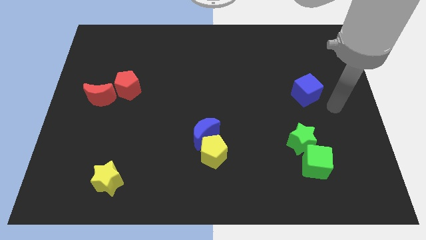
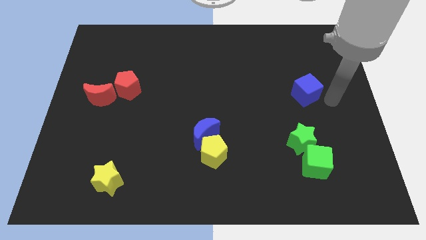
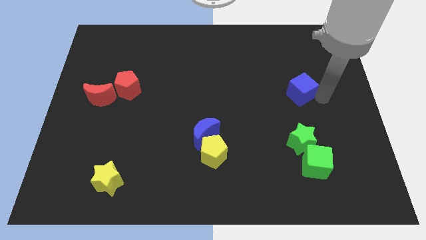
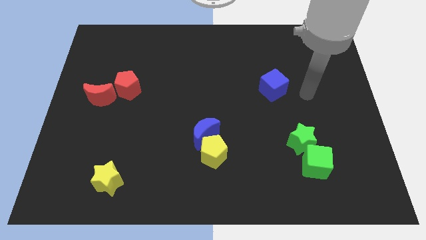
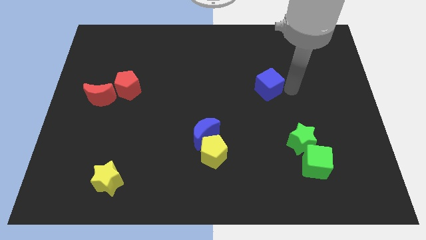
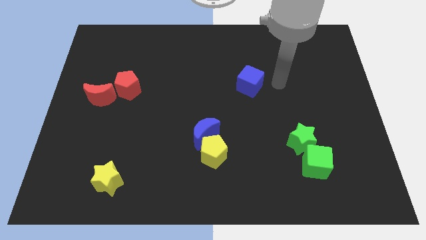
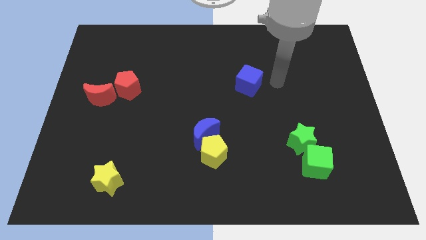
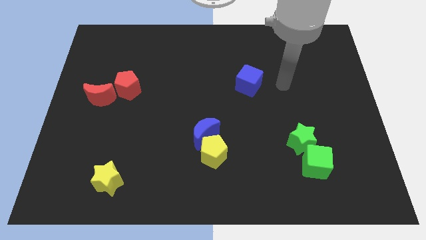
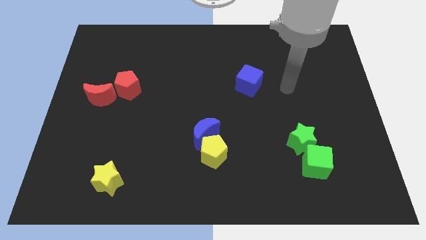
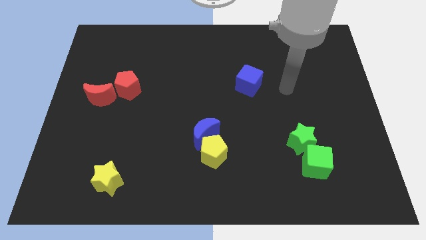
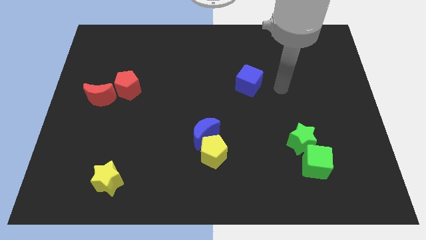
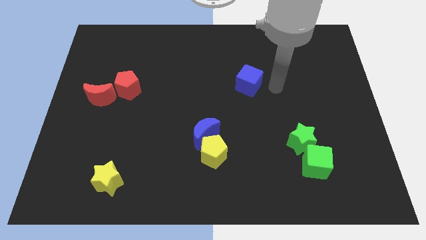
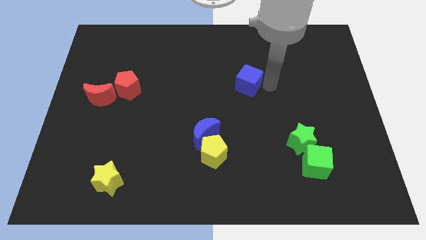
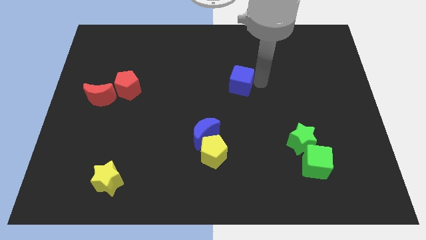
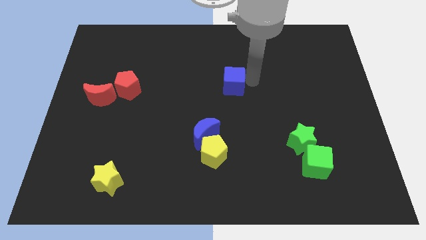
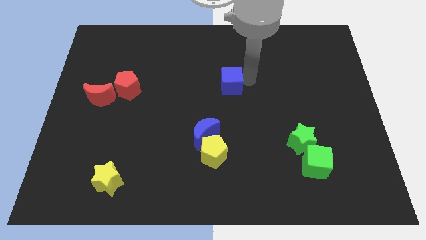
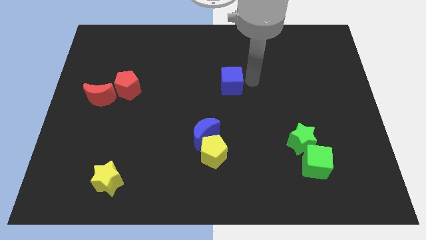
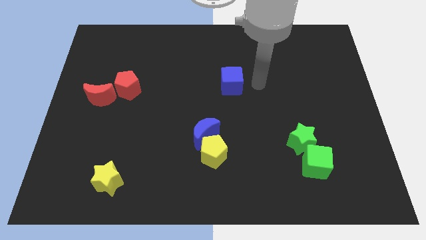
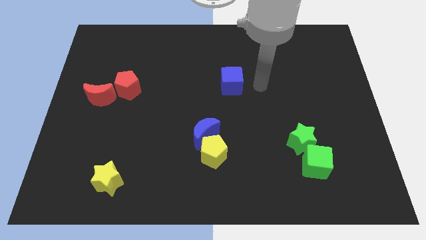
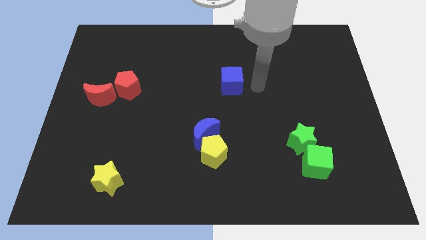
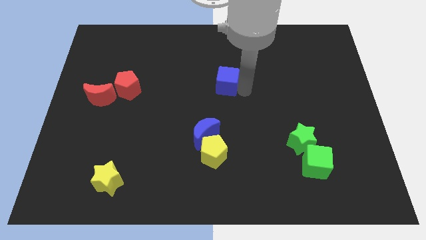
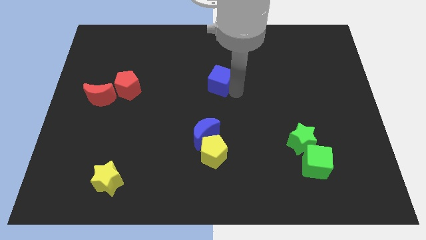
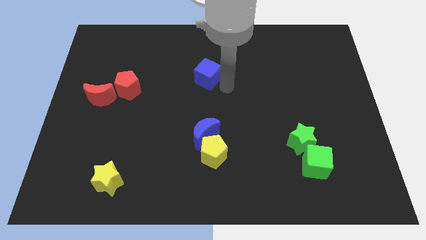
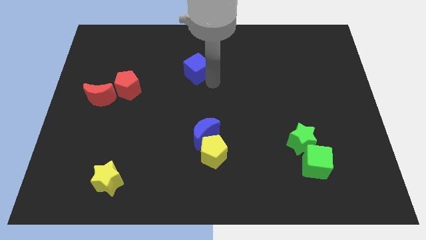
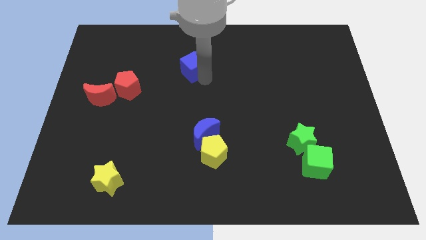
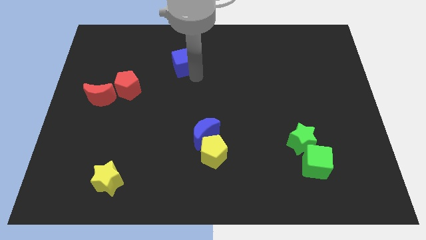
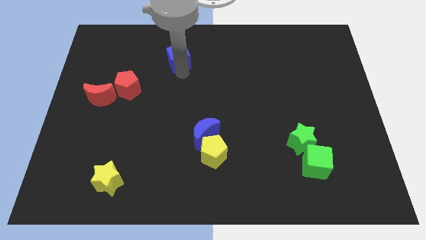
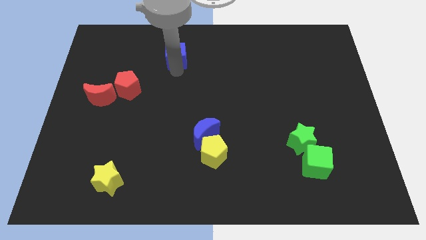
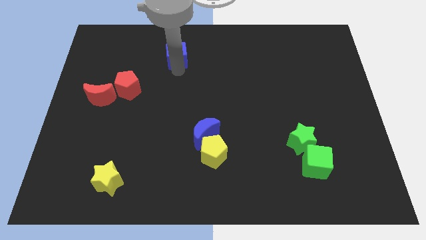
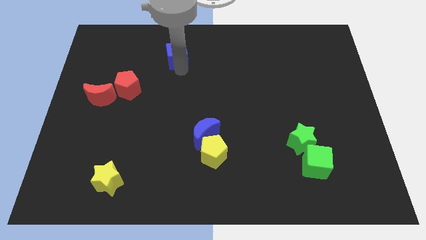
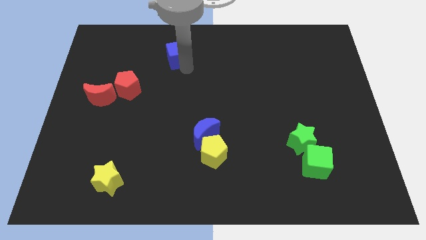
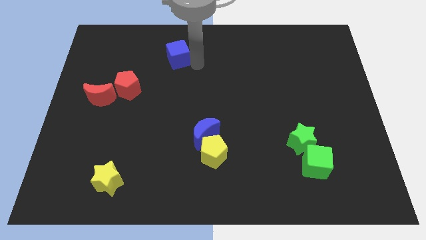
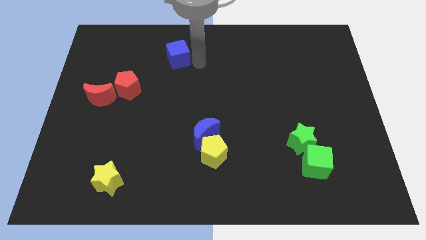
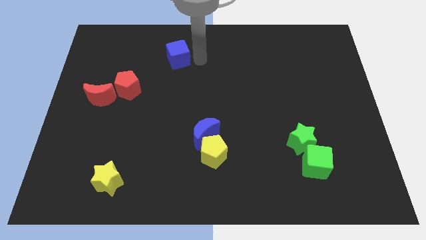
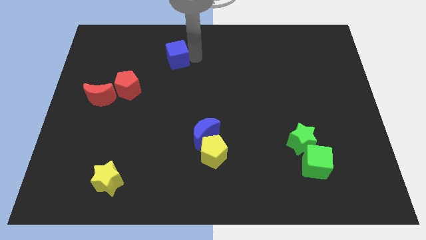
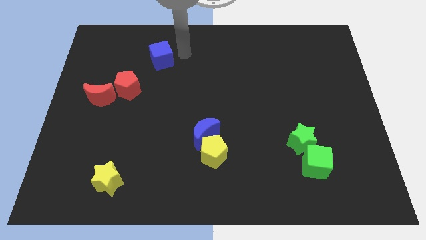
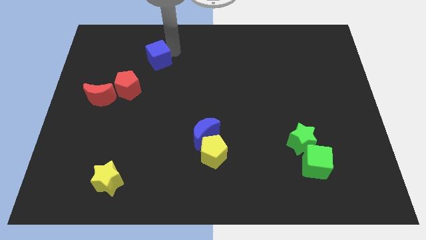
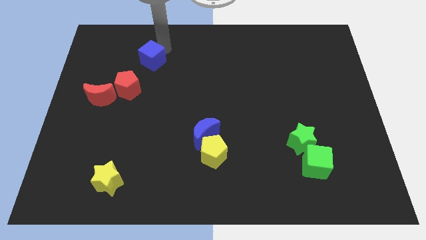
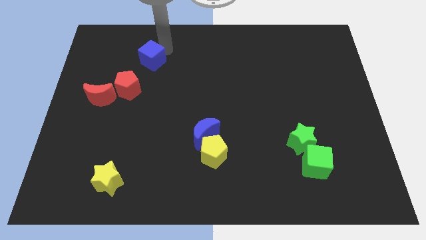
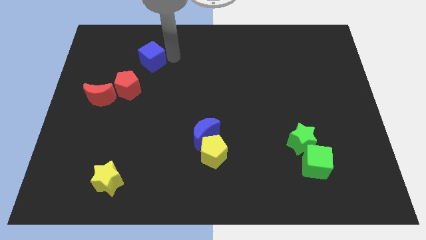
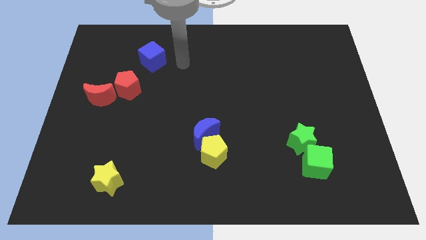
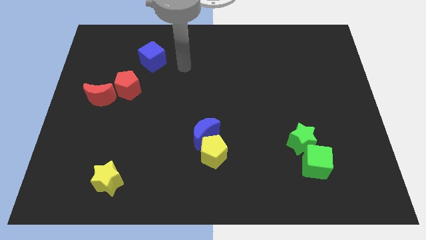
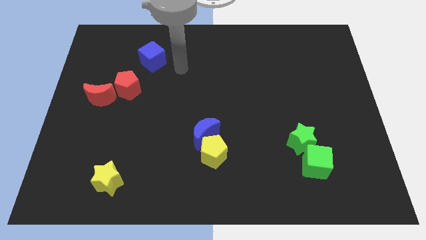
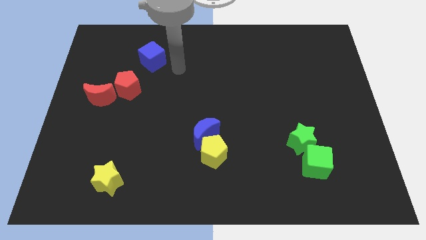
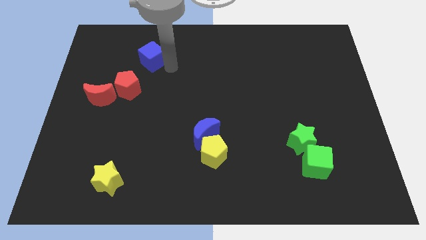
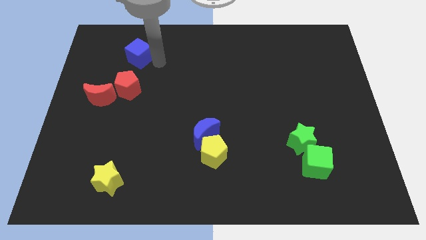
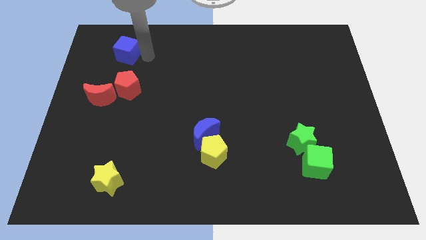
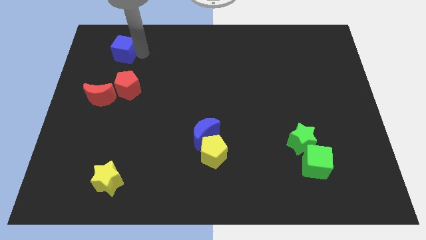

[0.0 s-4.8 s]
put the blue cube on the top of the red pentagon

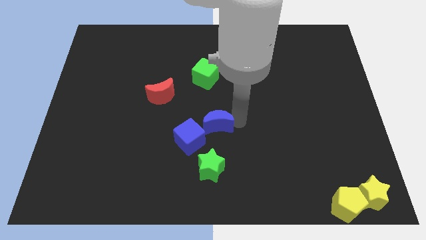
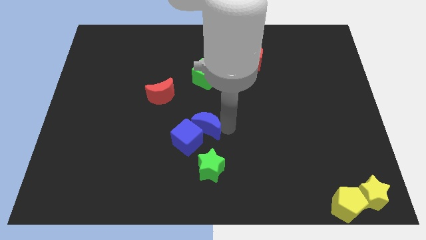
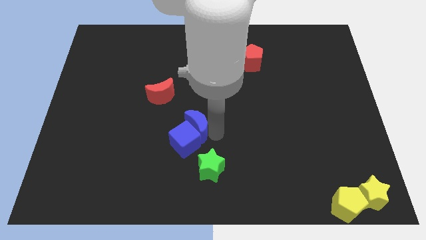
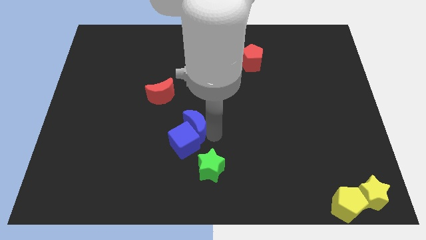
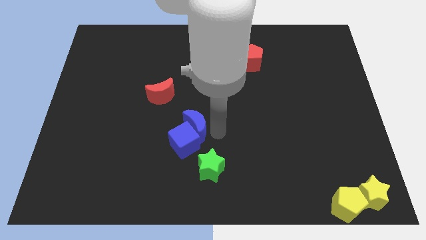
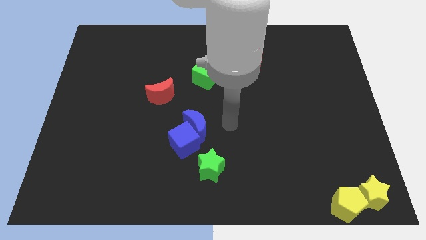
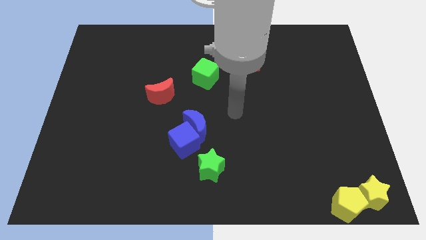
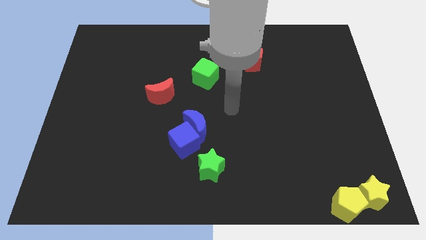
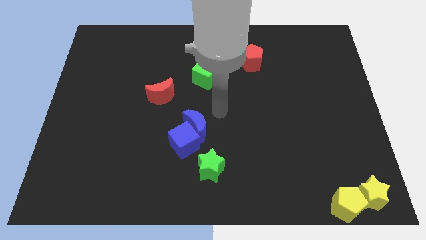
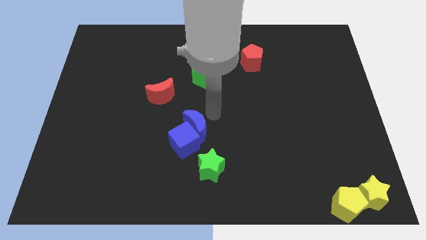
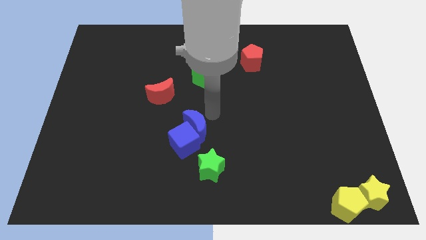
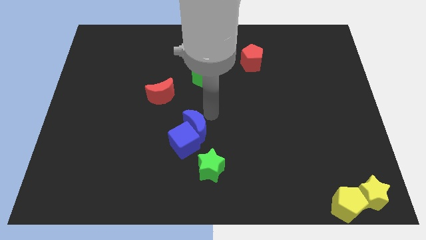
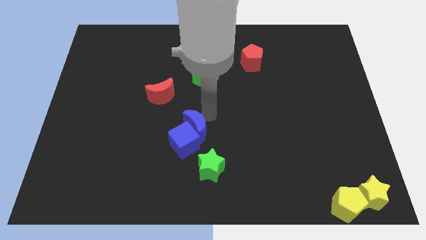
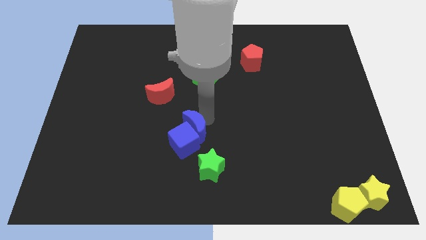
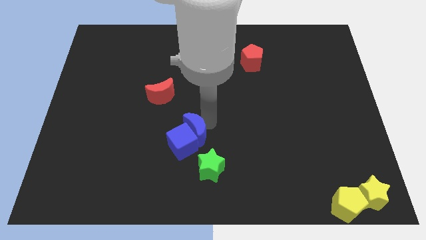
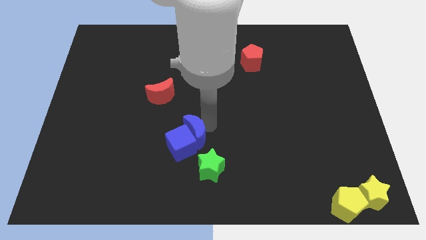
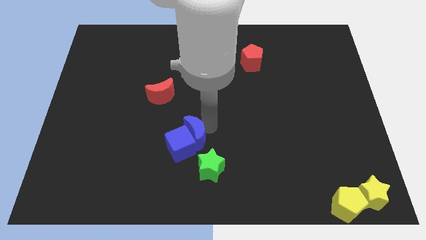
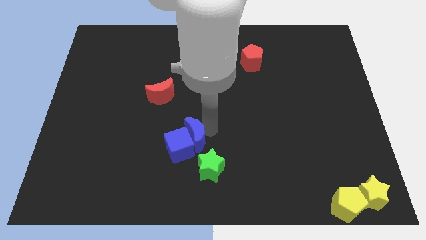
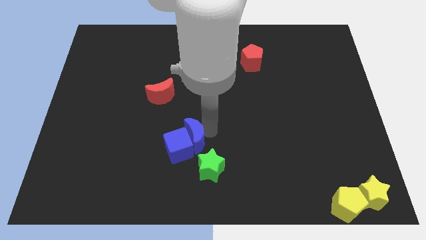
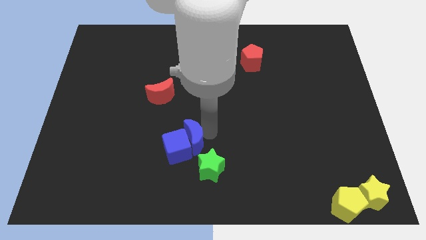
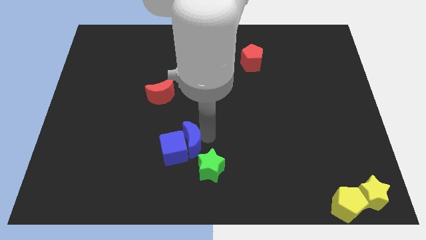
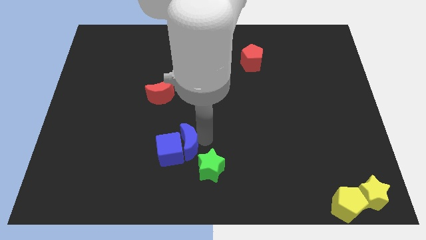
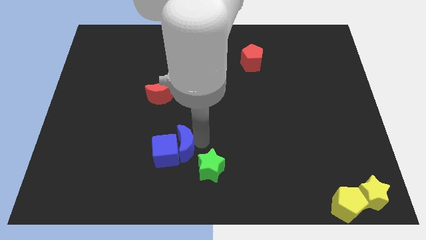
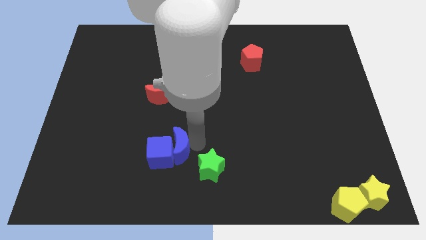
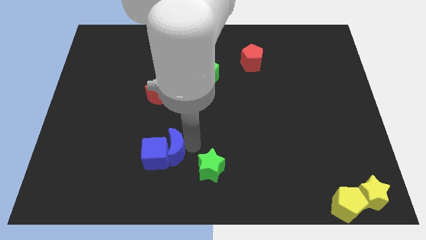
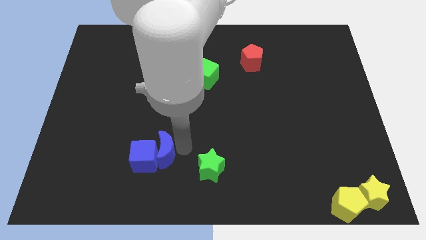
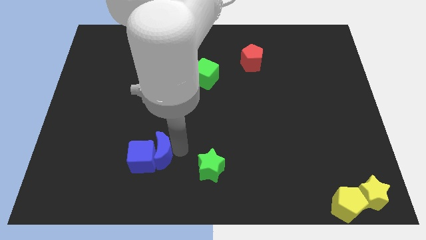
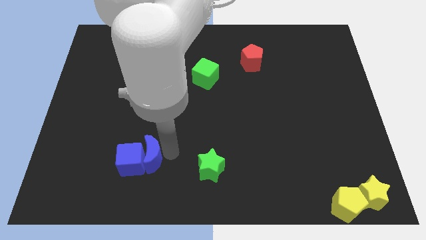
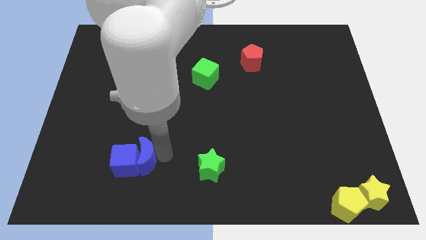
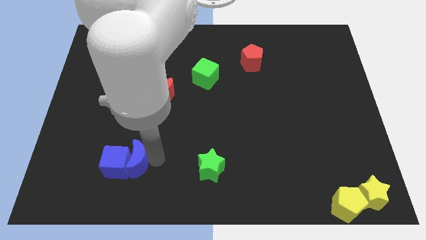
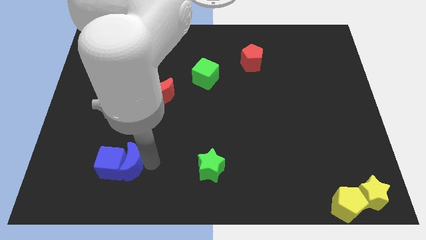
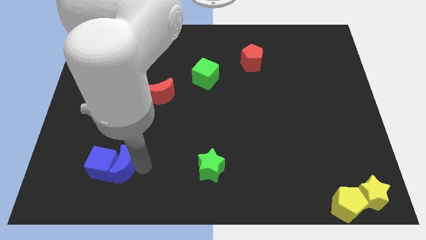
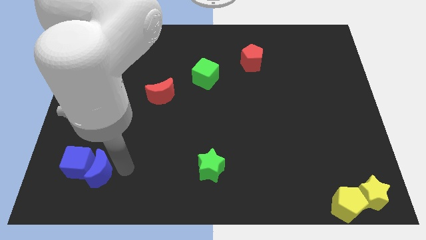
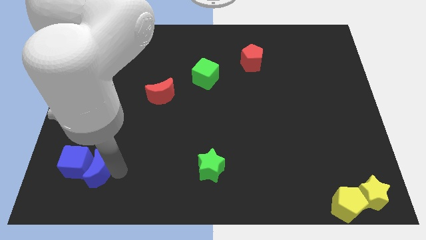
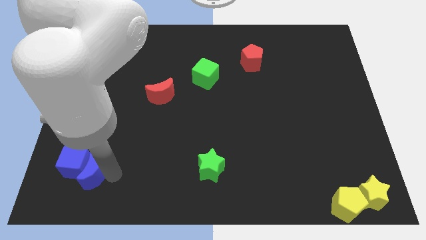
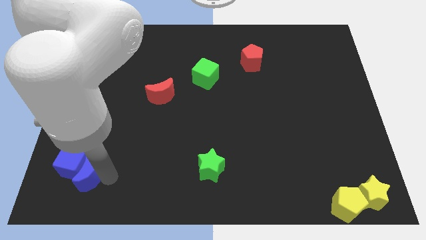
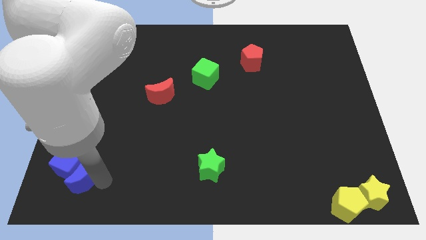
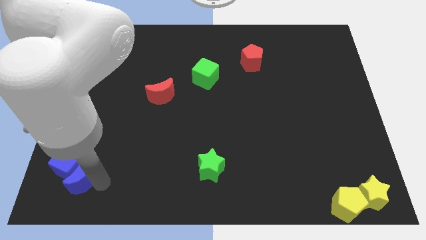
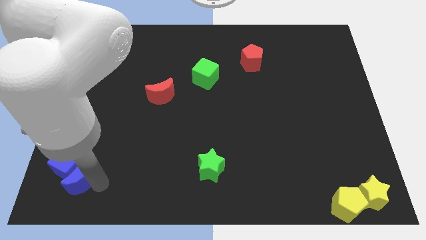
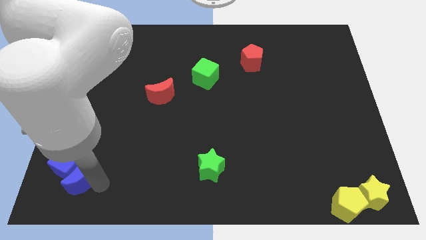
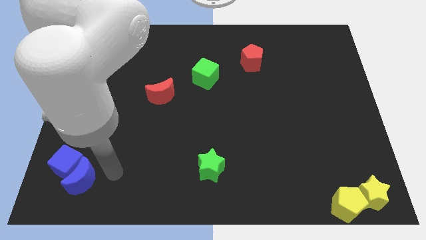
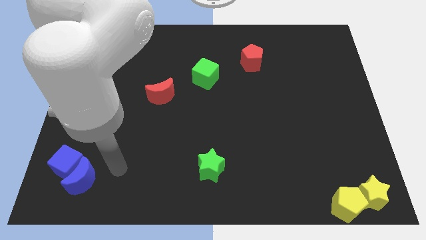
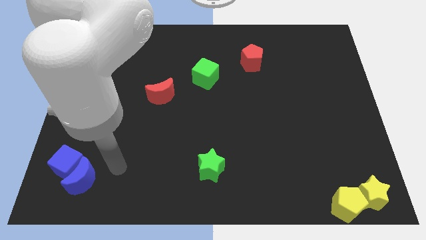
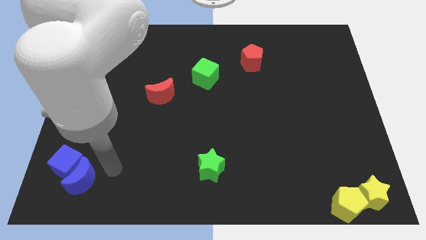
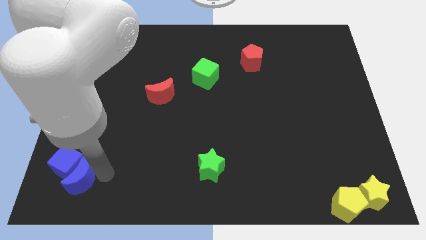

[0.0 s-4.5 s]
move blue crescent and blue cube to the bottom left
